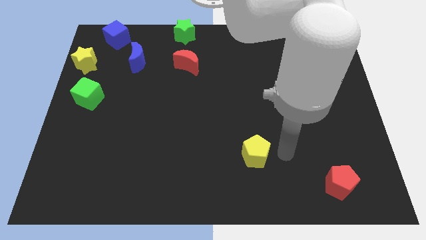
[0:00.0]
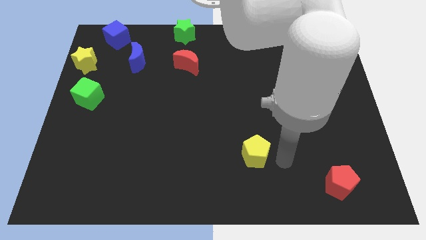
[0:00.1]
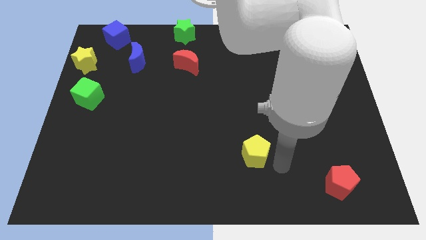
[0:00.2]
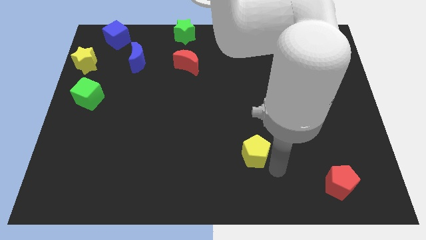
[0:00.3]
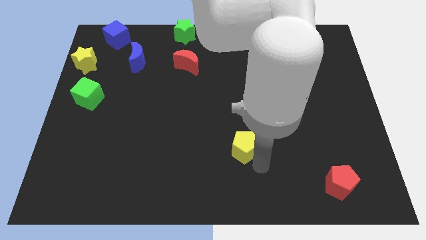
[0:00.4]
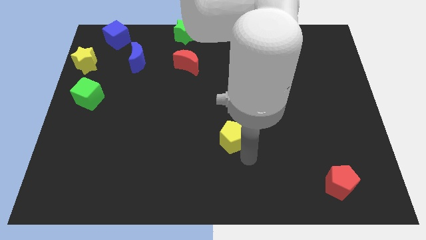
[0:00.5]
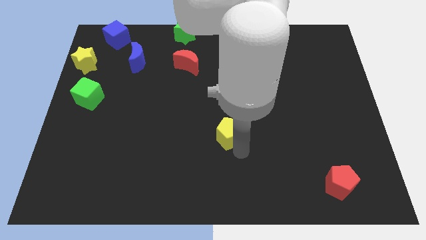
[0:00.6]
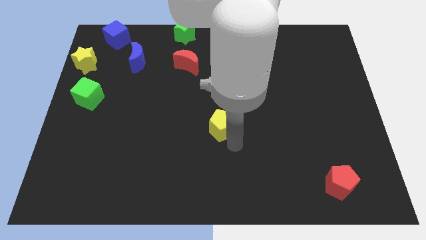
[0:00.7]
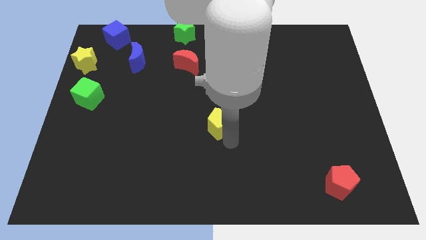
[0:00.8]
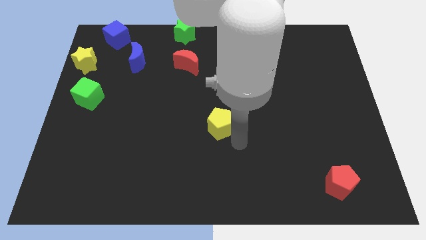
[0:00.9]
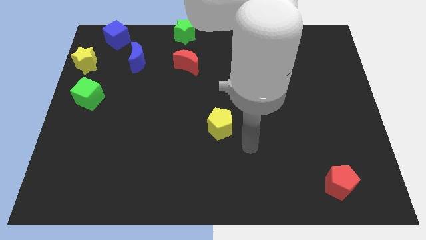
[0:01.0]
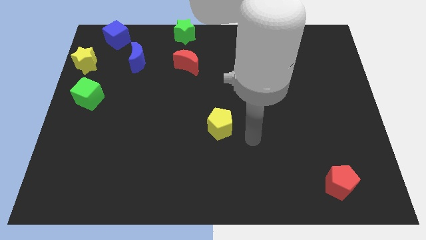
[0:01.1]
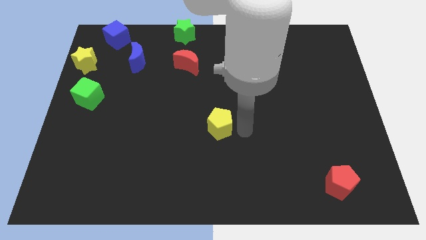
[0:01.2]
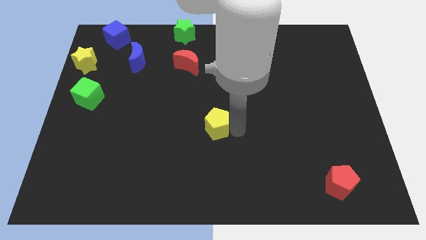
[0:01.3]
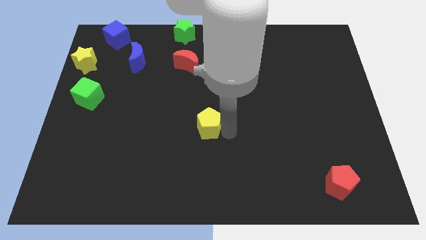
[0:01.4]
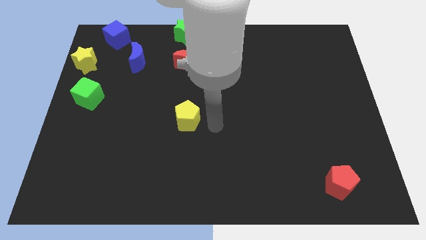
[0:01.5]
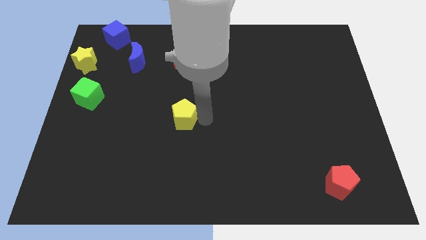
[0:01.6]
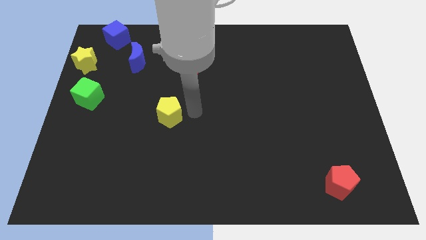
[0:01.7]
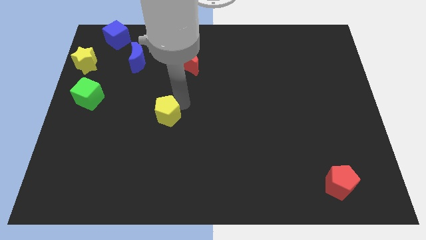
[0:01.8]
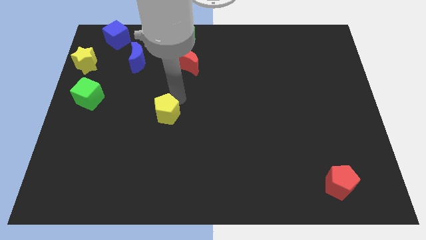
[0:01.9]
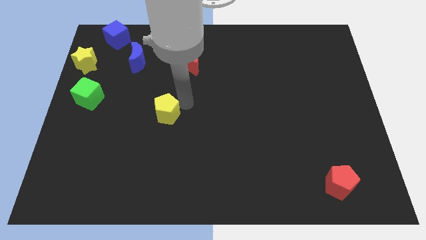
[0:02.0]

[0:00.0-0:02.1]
move yellow pentagon to the bottom right of green cube

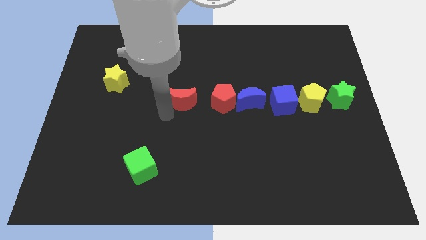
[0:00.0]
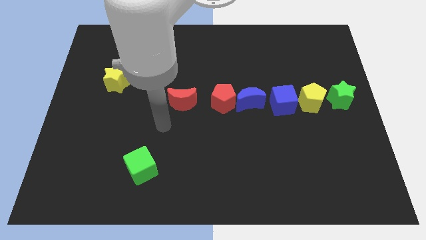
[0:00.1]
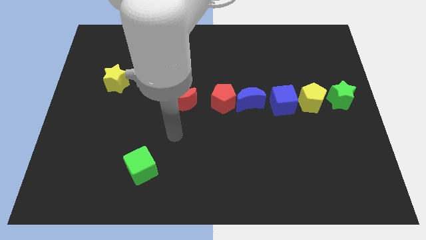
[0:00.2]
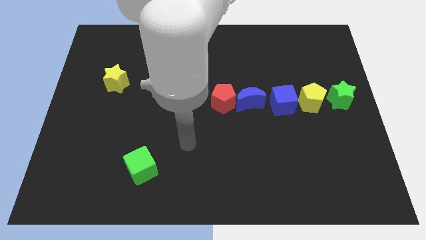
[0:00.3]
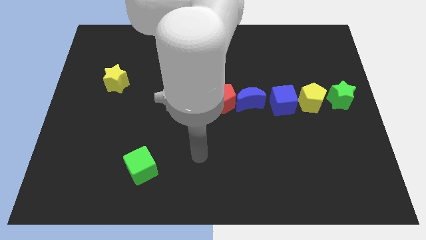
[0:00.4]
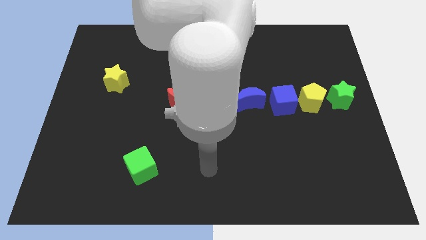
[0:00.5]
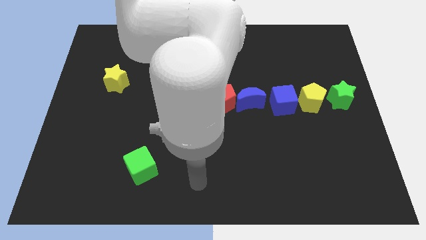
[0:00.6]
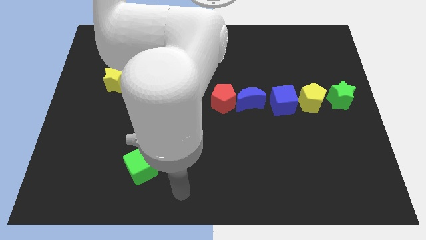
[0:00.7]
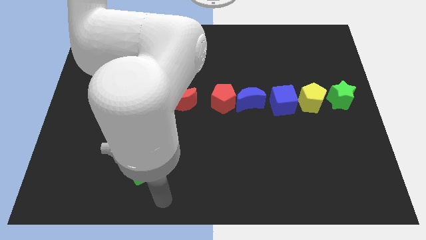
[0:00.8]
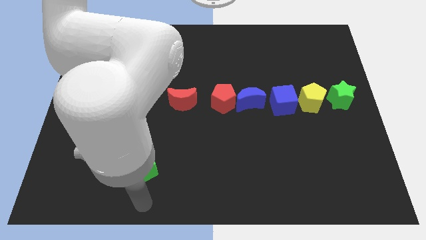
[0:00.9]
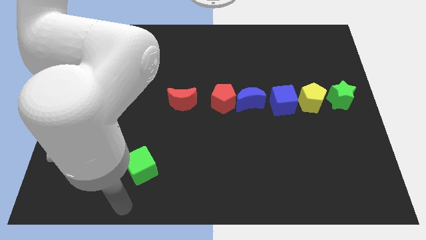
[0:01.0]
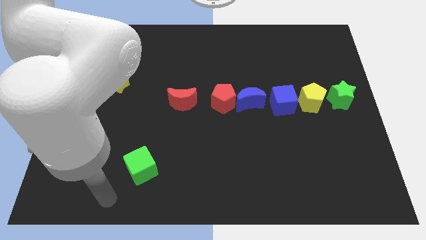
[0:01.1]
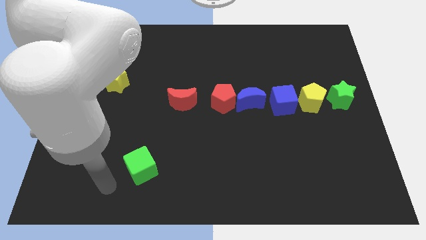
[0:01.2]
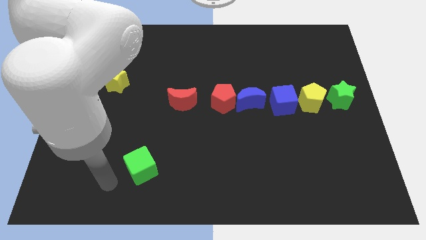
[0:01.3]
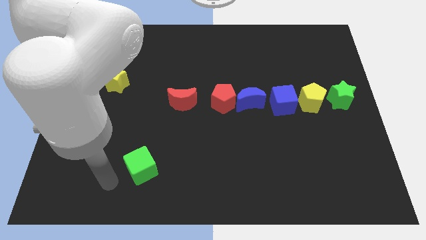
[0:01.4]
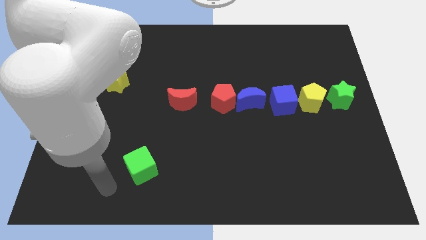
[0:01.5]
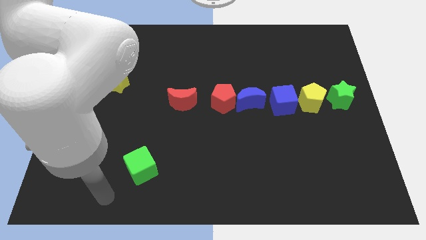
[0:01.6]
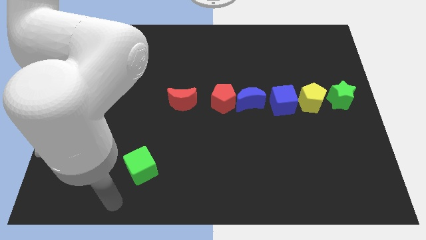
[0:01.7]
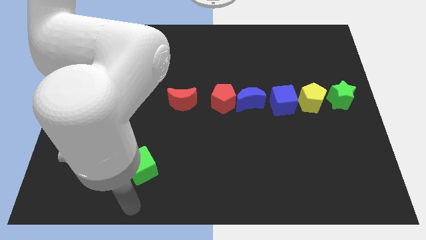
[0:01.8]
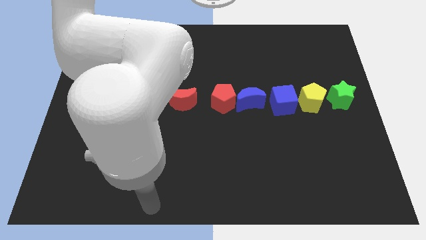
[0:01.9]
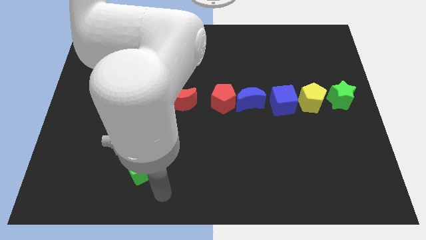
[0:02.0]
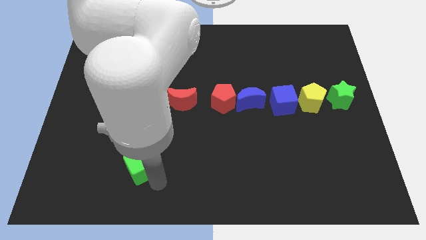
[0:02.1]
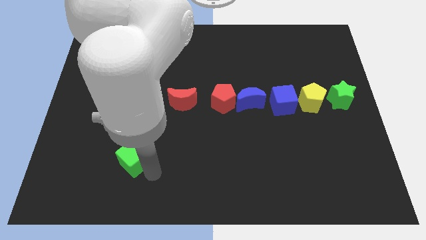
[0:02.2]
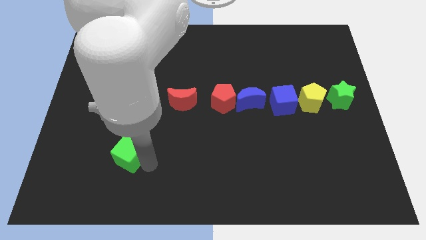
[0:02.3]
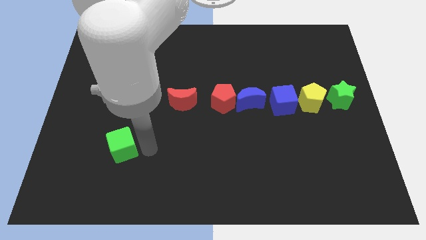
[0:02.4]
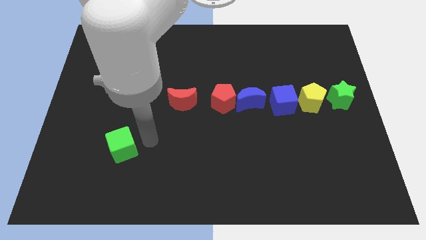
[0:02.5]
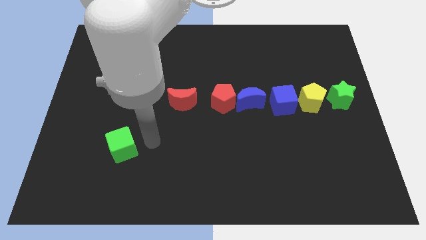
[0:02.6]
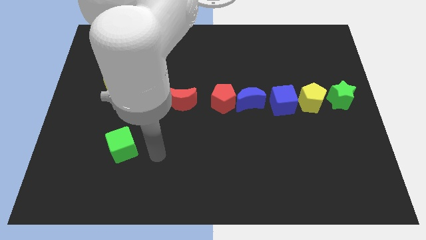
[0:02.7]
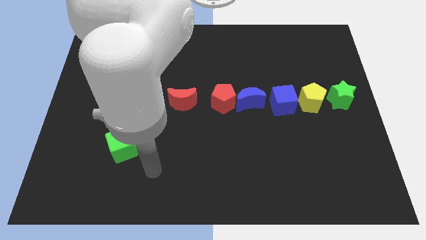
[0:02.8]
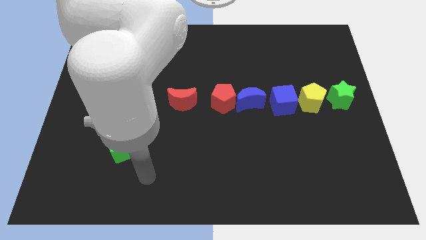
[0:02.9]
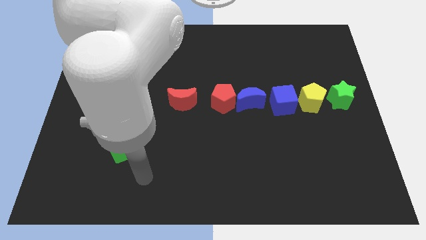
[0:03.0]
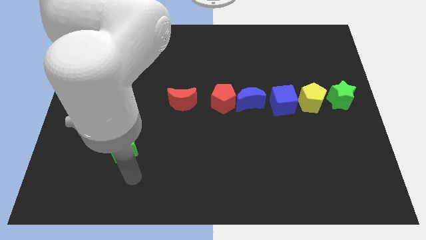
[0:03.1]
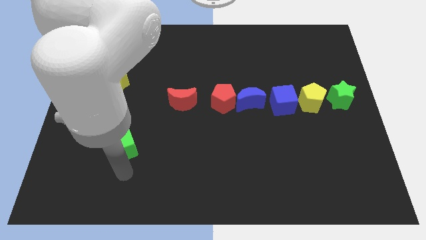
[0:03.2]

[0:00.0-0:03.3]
move the arm away from the red moon

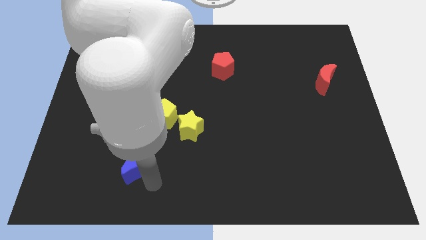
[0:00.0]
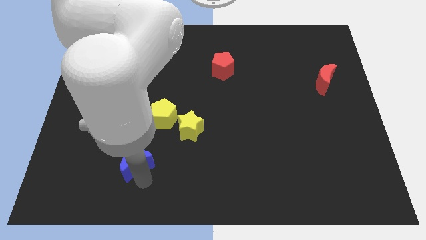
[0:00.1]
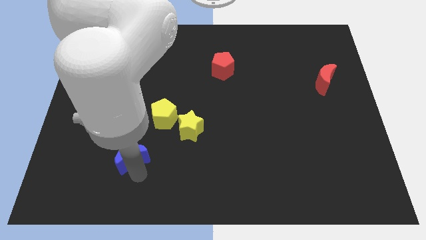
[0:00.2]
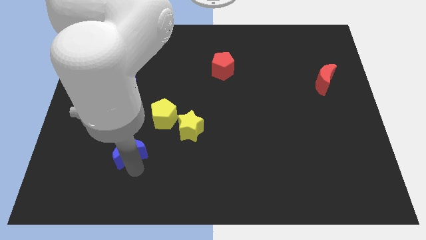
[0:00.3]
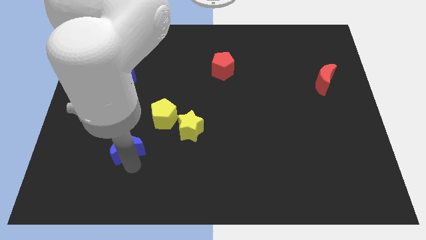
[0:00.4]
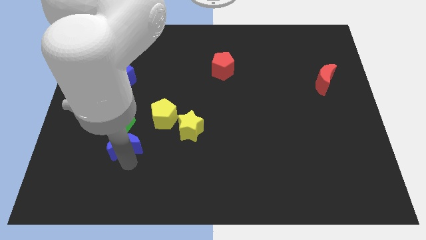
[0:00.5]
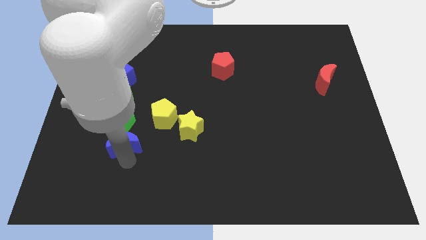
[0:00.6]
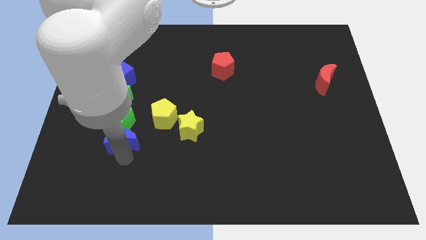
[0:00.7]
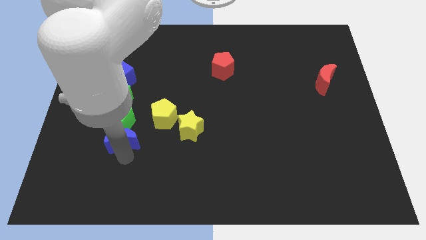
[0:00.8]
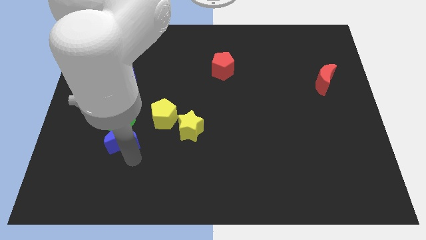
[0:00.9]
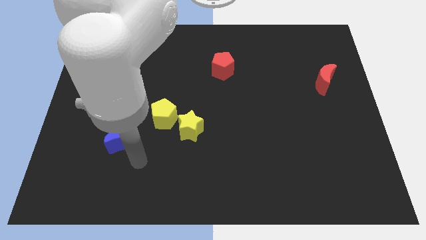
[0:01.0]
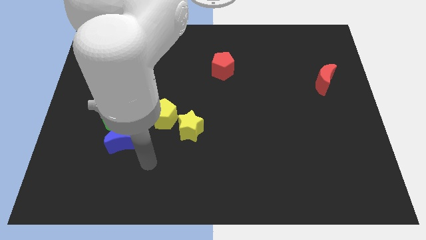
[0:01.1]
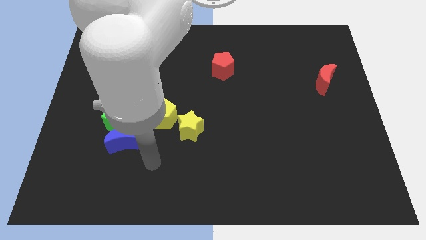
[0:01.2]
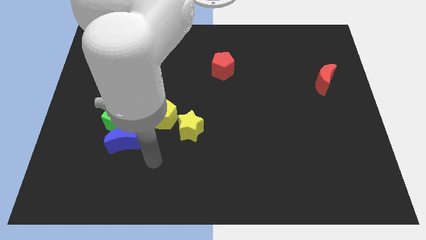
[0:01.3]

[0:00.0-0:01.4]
slide the blue crescent slightly towards the green cube

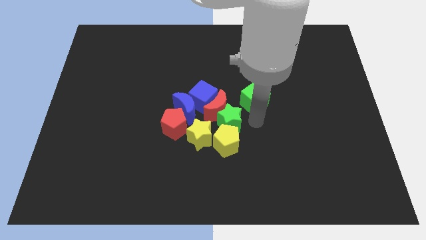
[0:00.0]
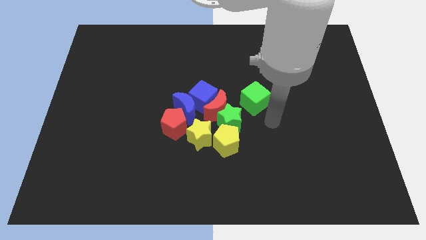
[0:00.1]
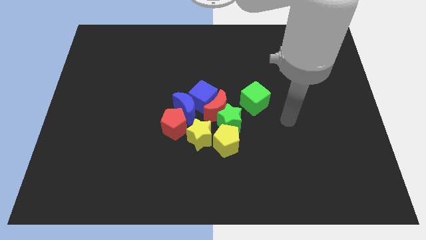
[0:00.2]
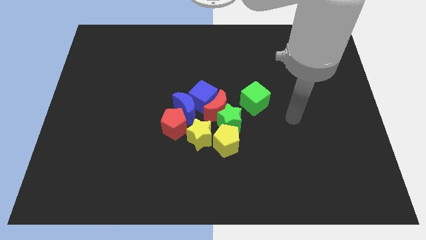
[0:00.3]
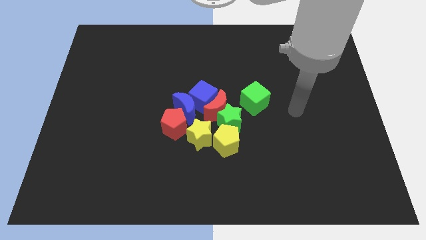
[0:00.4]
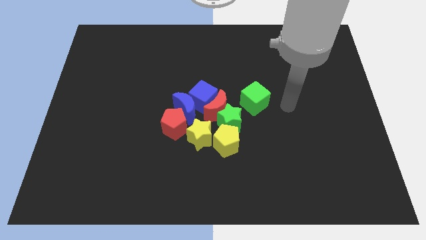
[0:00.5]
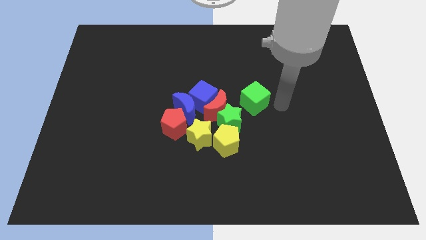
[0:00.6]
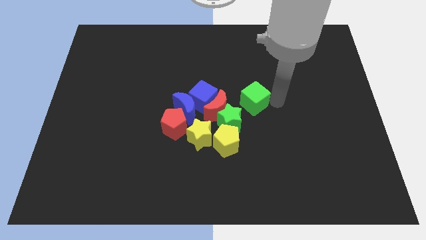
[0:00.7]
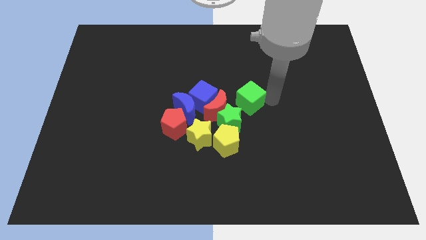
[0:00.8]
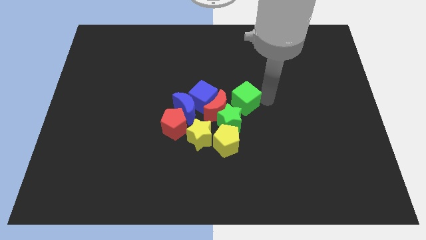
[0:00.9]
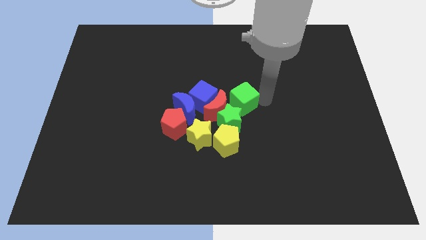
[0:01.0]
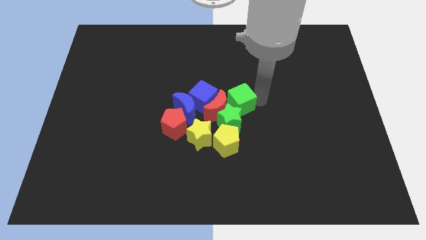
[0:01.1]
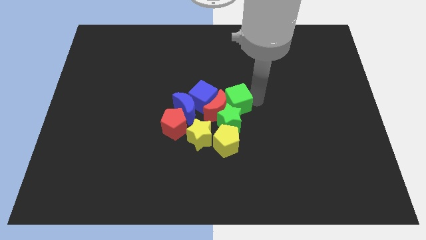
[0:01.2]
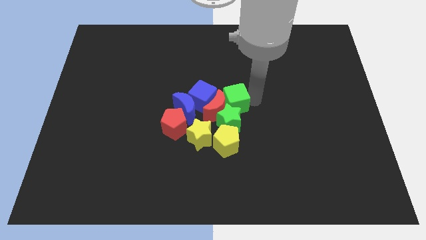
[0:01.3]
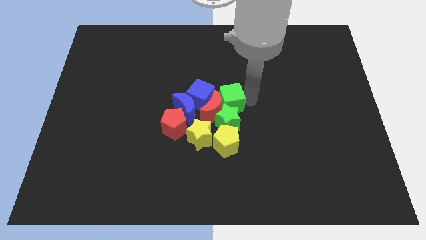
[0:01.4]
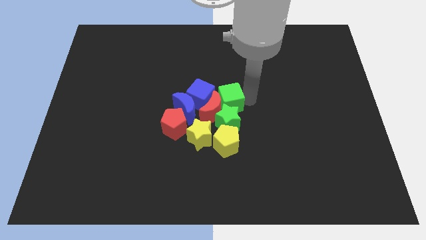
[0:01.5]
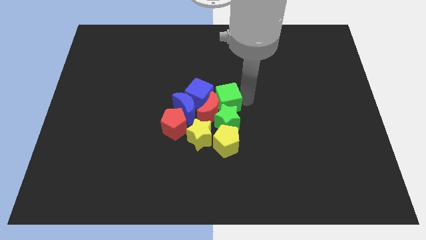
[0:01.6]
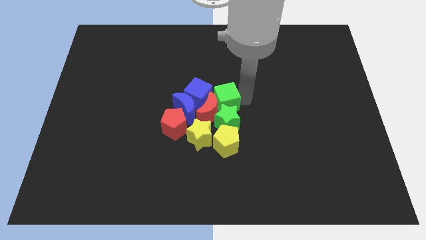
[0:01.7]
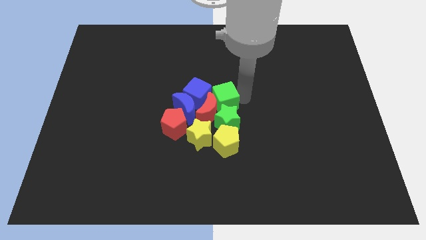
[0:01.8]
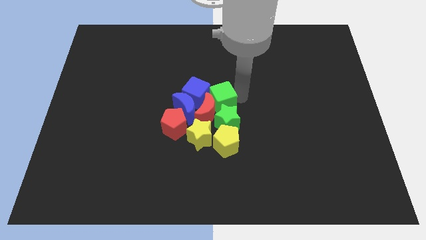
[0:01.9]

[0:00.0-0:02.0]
push the green cube into the group of blocks
